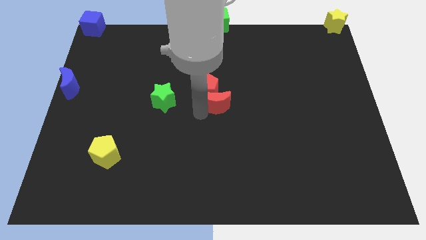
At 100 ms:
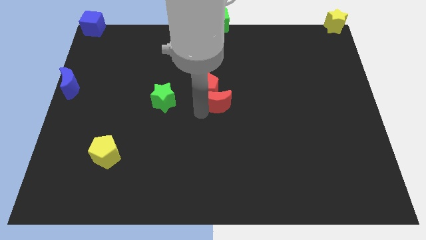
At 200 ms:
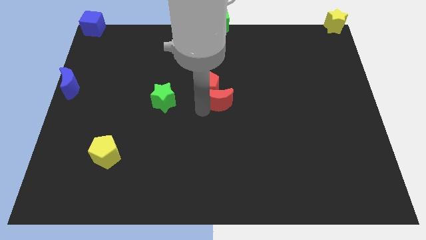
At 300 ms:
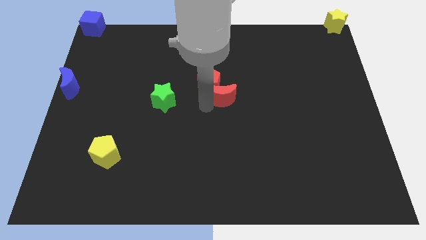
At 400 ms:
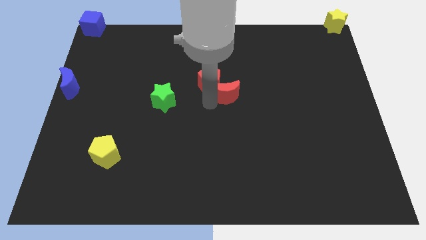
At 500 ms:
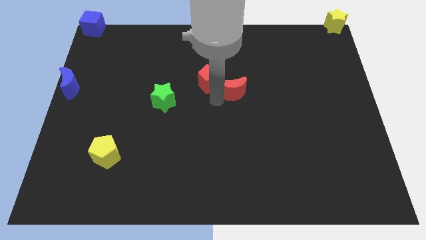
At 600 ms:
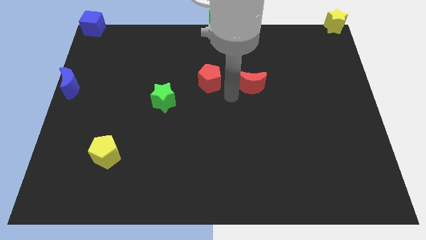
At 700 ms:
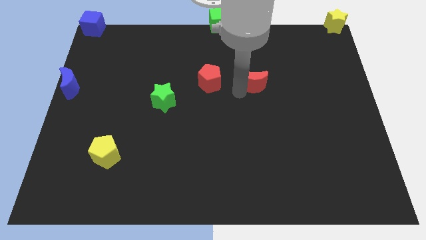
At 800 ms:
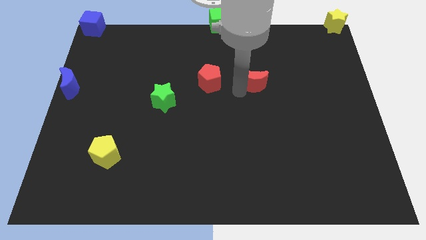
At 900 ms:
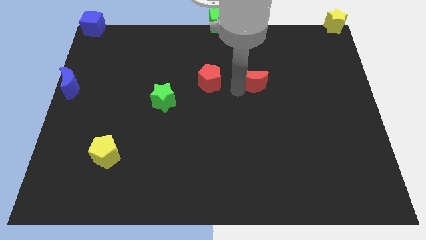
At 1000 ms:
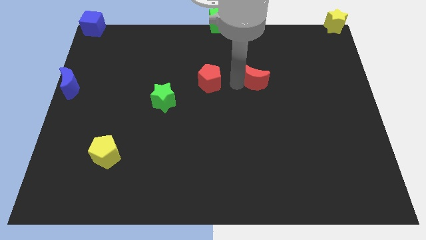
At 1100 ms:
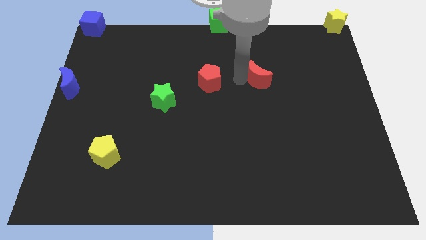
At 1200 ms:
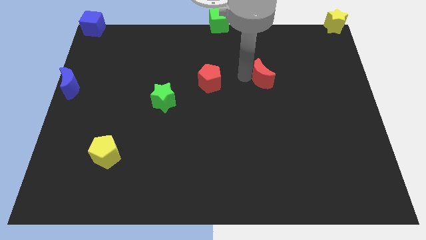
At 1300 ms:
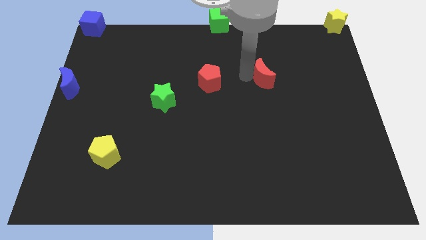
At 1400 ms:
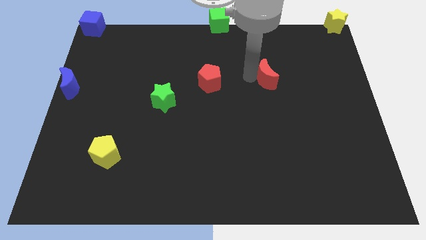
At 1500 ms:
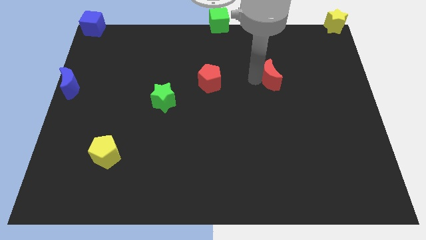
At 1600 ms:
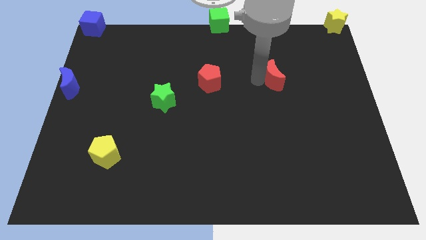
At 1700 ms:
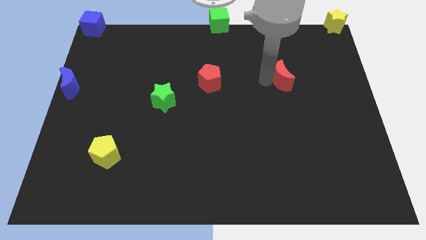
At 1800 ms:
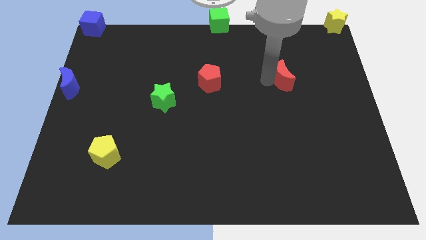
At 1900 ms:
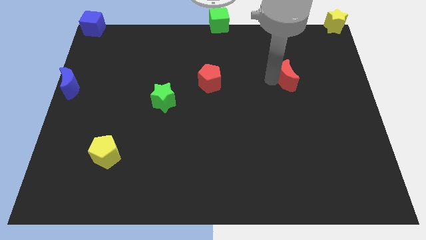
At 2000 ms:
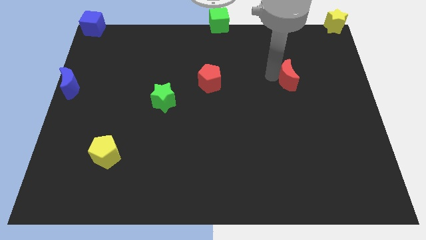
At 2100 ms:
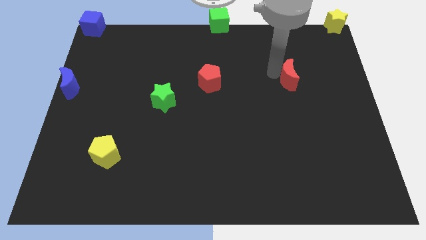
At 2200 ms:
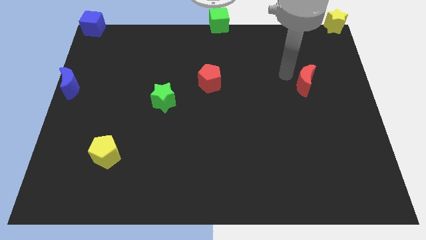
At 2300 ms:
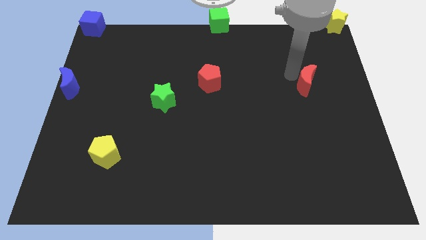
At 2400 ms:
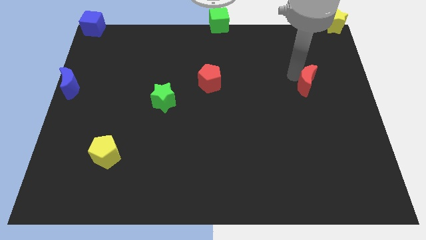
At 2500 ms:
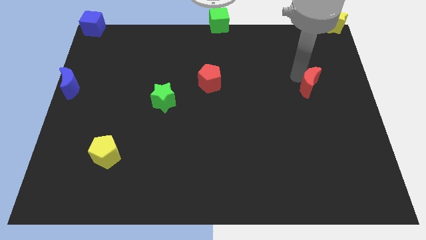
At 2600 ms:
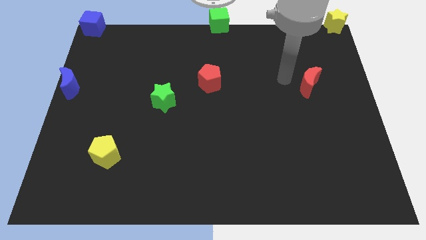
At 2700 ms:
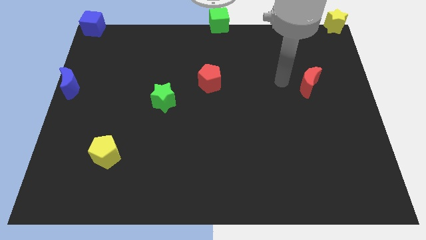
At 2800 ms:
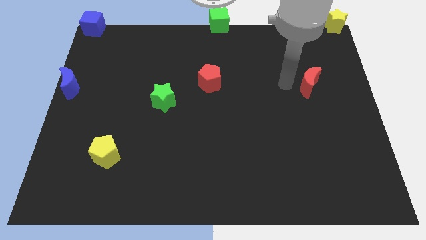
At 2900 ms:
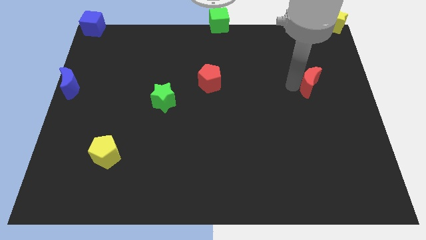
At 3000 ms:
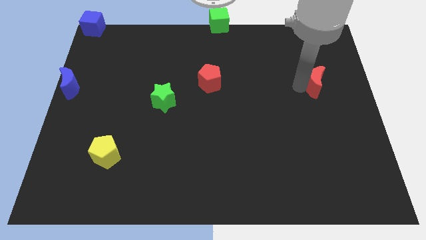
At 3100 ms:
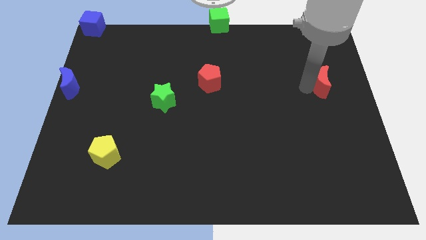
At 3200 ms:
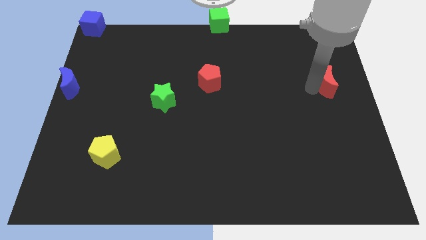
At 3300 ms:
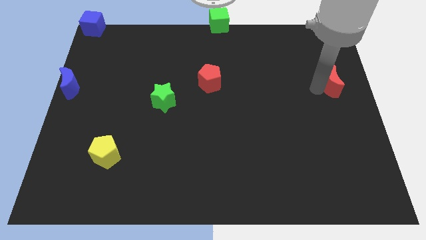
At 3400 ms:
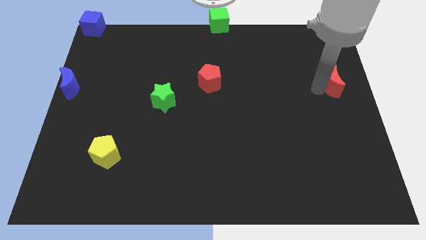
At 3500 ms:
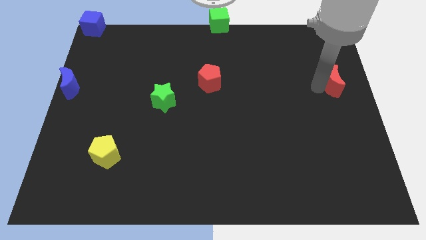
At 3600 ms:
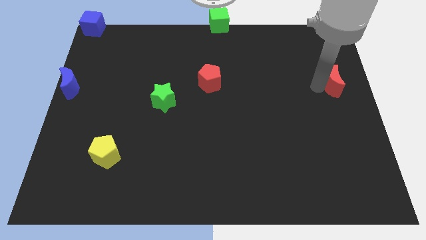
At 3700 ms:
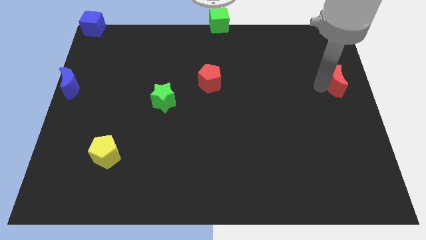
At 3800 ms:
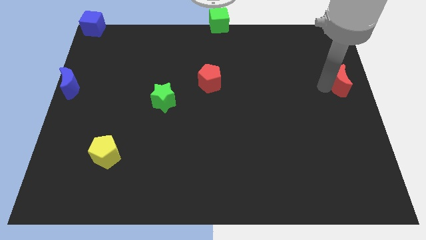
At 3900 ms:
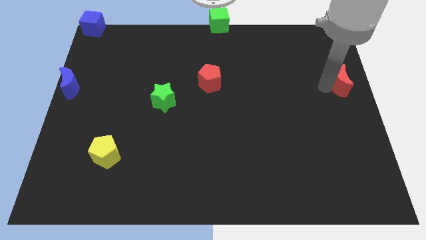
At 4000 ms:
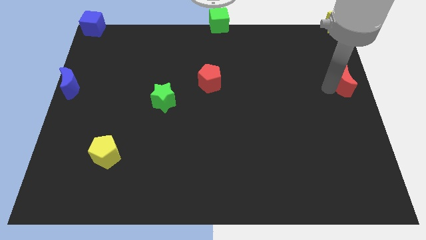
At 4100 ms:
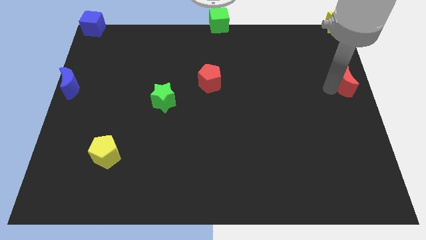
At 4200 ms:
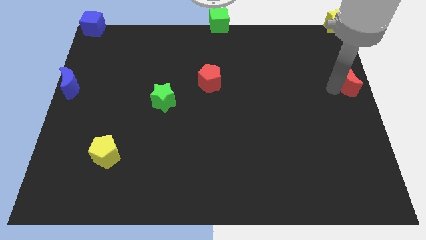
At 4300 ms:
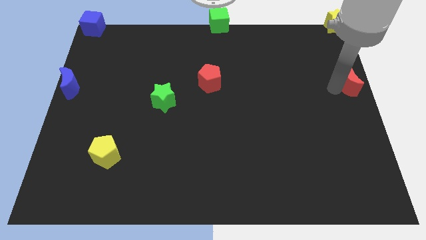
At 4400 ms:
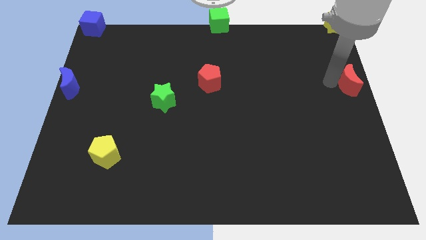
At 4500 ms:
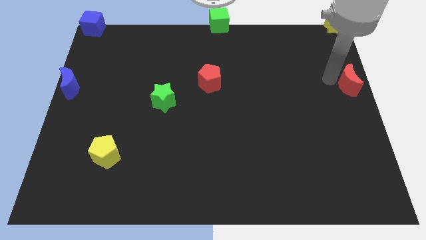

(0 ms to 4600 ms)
place the red moon below the yellow star

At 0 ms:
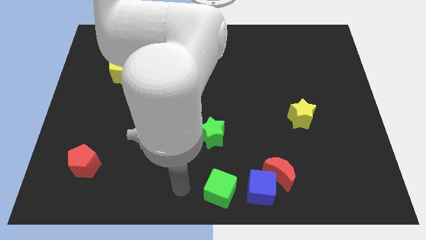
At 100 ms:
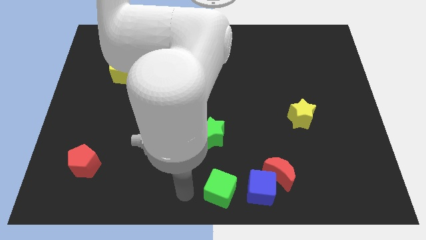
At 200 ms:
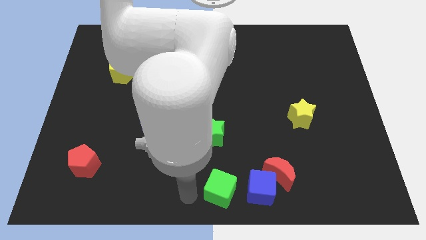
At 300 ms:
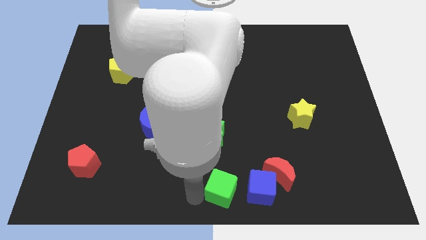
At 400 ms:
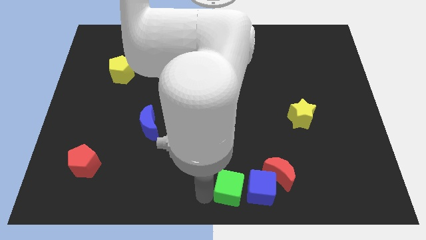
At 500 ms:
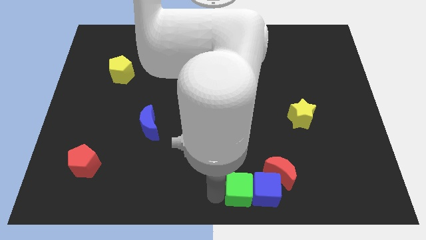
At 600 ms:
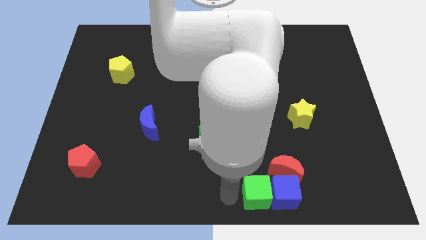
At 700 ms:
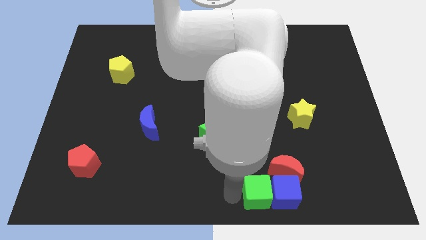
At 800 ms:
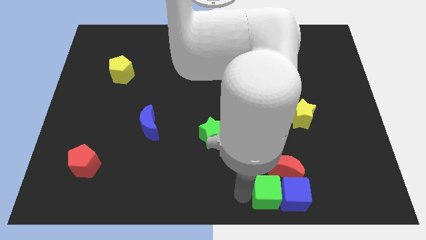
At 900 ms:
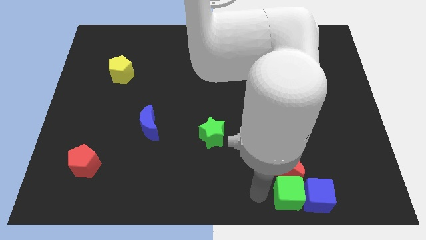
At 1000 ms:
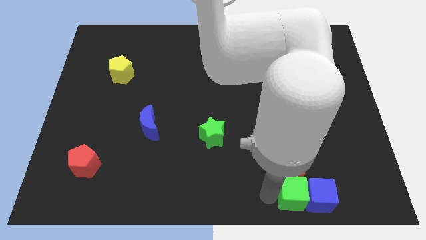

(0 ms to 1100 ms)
push the green cube along with the blue cube slightly towards the bottom right

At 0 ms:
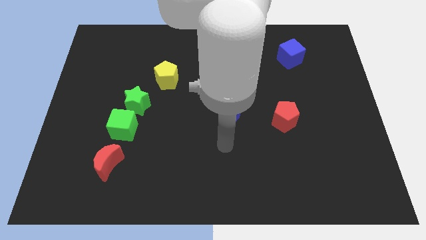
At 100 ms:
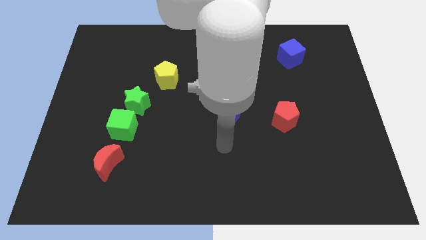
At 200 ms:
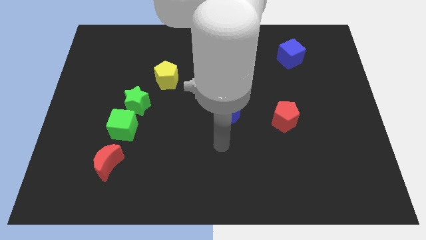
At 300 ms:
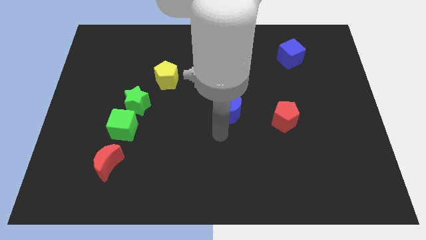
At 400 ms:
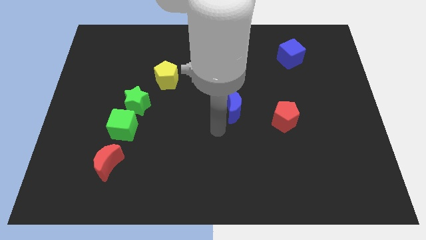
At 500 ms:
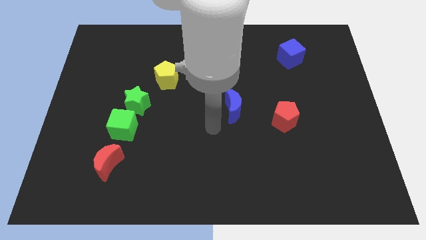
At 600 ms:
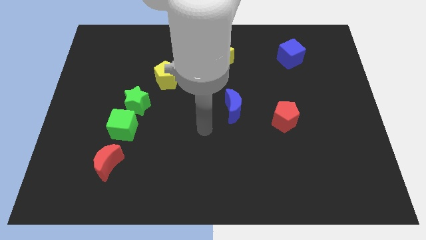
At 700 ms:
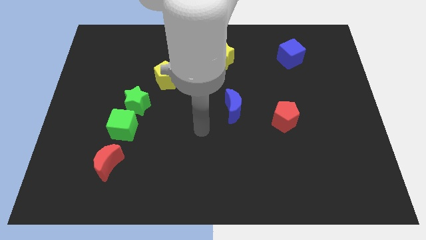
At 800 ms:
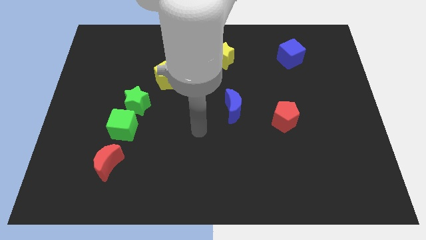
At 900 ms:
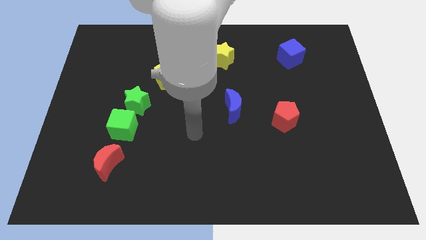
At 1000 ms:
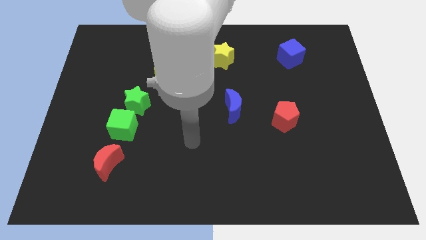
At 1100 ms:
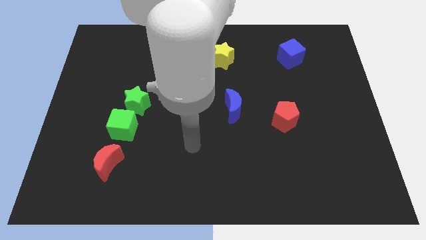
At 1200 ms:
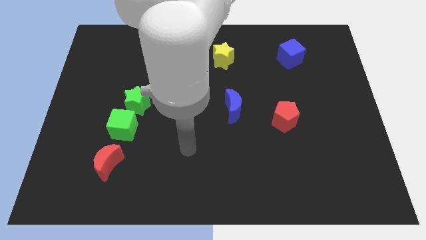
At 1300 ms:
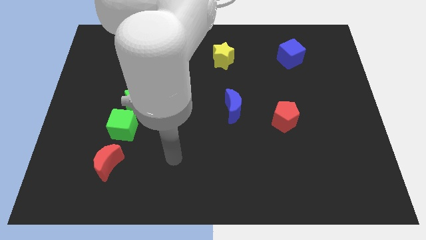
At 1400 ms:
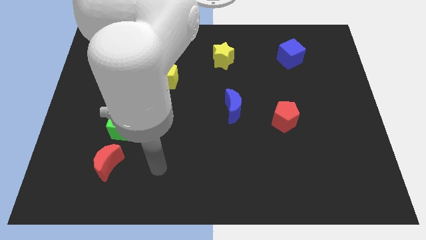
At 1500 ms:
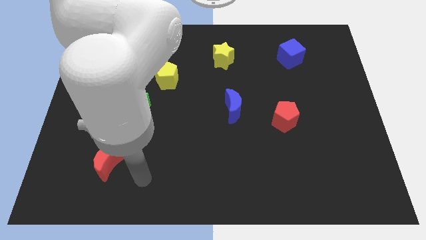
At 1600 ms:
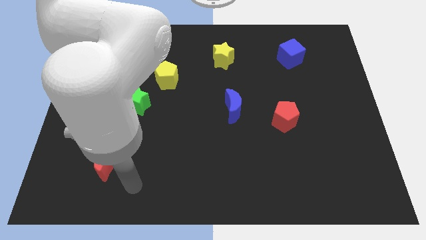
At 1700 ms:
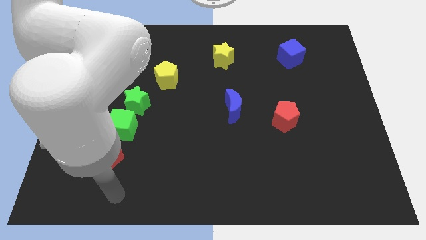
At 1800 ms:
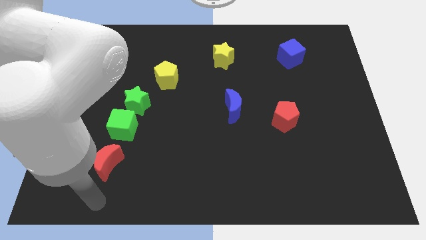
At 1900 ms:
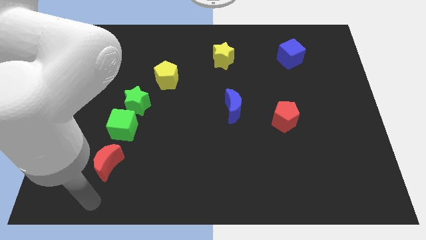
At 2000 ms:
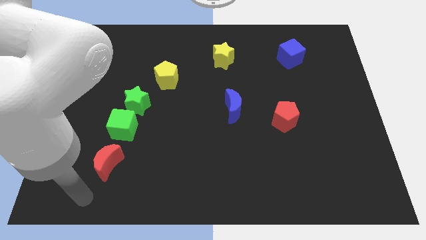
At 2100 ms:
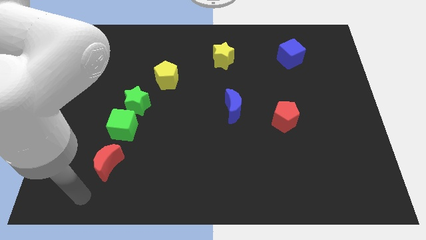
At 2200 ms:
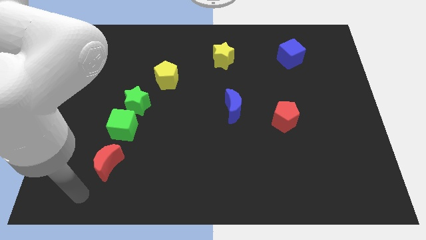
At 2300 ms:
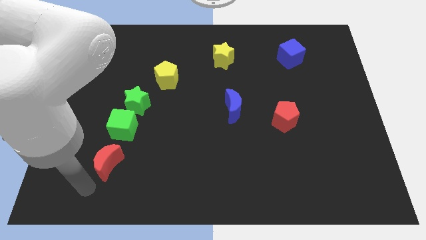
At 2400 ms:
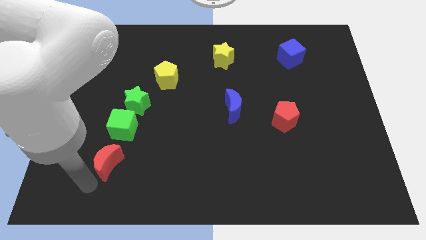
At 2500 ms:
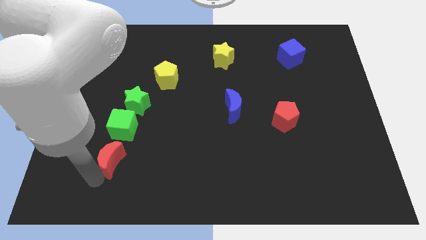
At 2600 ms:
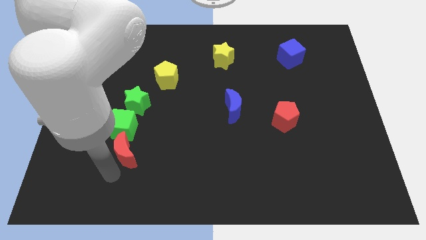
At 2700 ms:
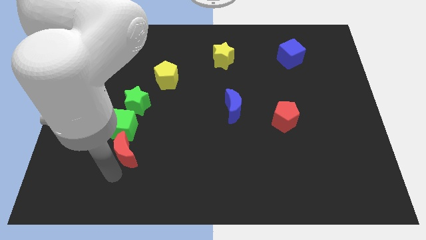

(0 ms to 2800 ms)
move the red moon into the green cube

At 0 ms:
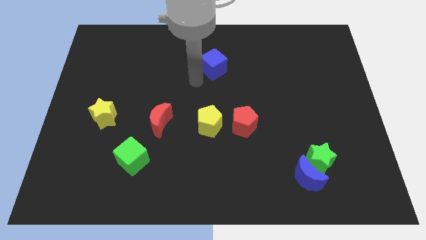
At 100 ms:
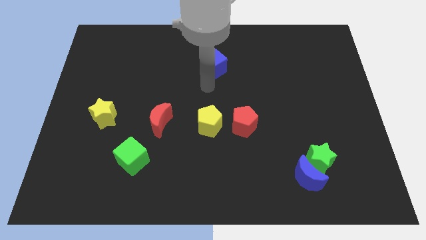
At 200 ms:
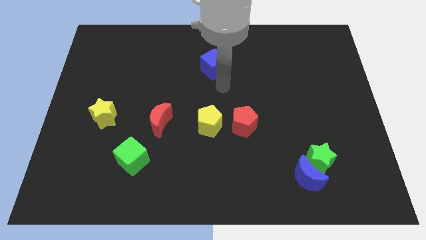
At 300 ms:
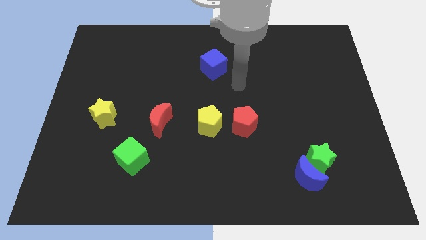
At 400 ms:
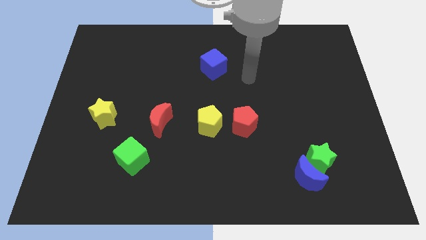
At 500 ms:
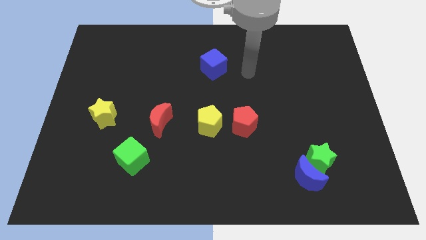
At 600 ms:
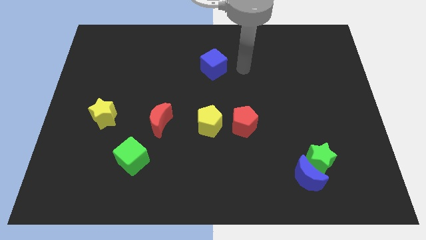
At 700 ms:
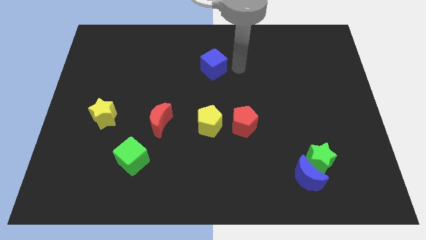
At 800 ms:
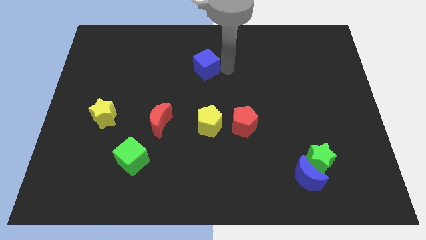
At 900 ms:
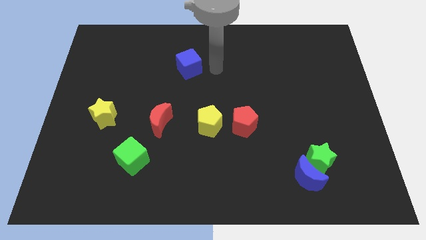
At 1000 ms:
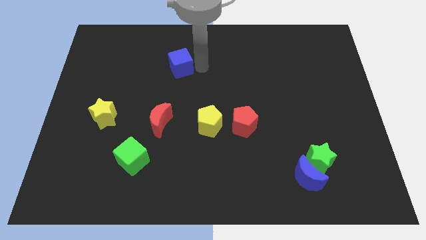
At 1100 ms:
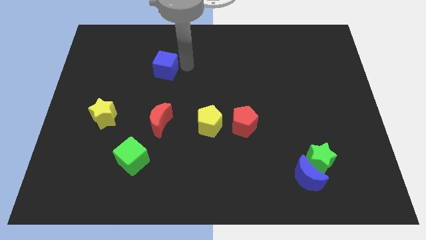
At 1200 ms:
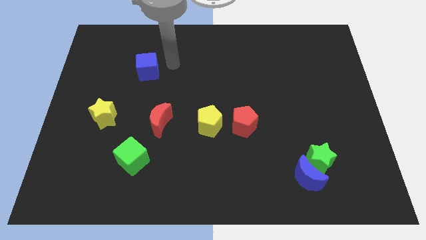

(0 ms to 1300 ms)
push the blue cube to the left side
